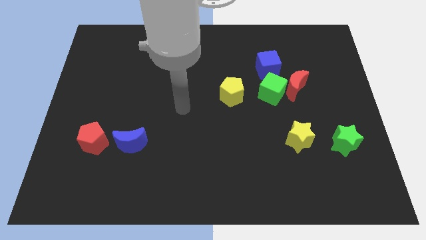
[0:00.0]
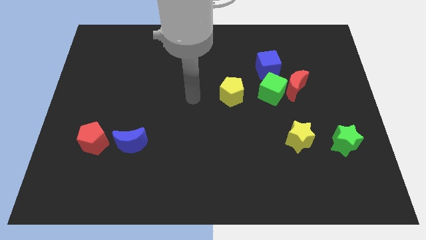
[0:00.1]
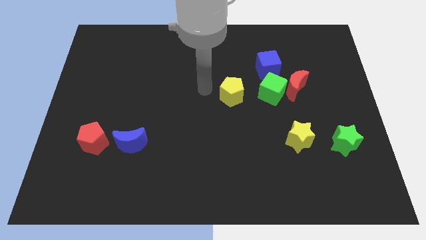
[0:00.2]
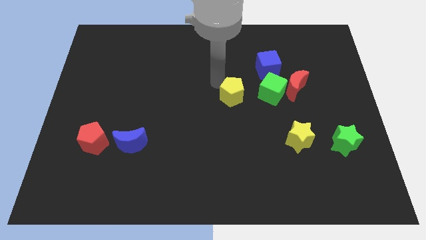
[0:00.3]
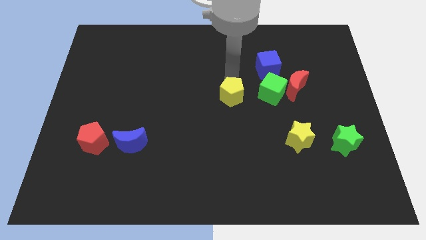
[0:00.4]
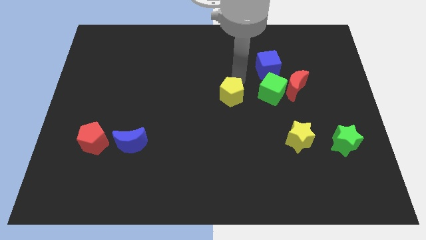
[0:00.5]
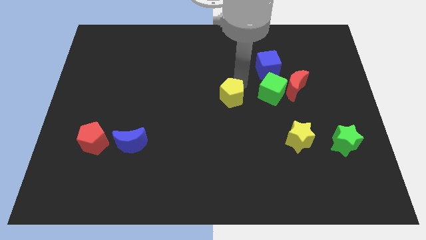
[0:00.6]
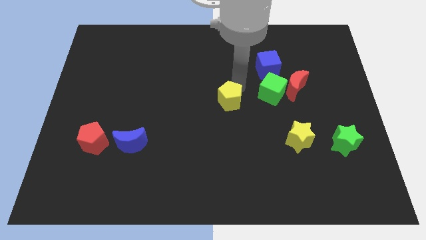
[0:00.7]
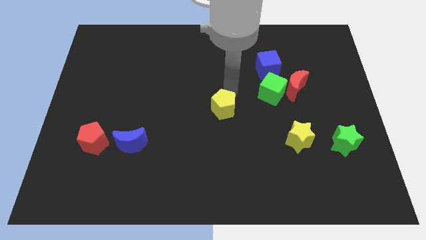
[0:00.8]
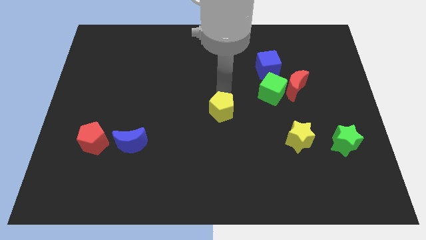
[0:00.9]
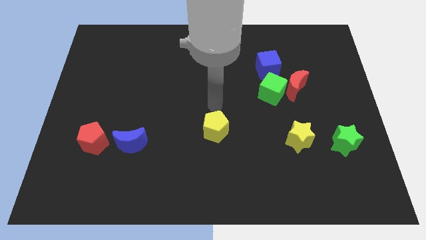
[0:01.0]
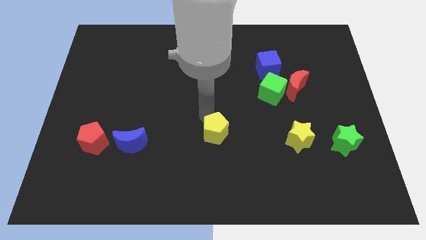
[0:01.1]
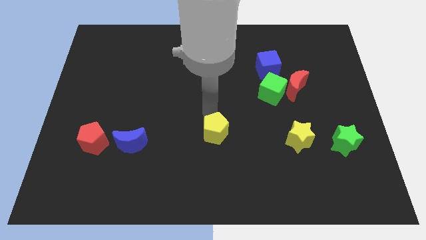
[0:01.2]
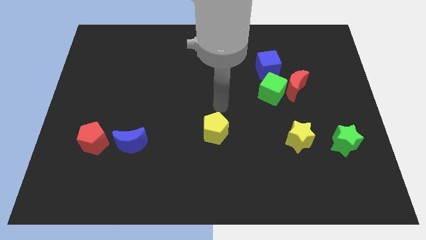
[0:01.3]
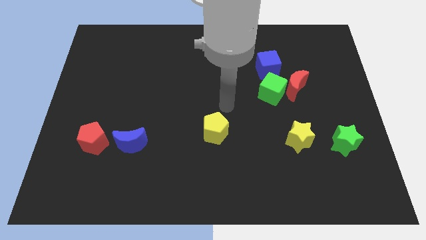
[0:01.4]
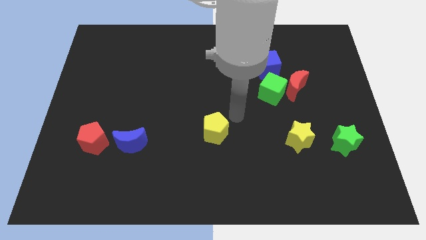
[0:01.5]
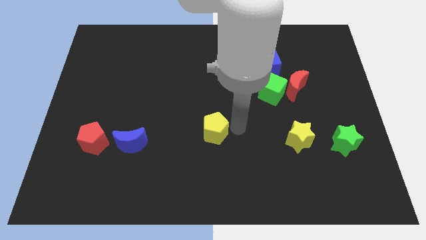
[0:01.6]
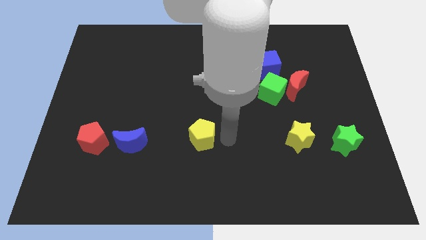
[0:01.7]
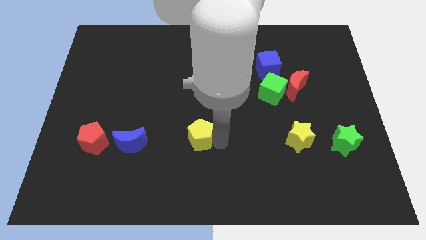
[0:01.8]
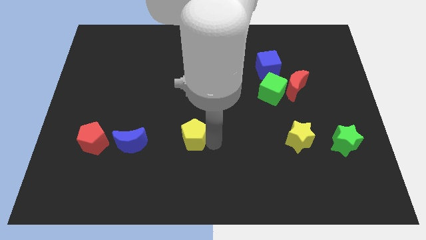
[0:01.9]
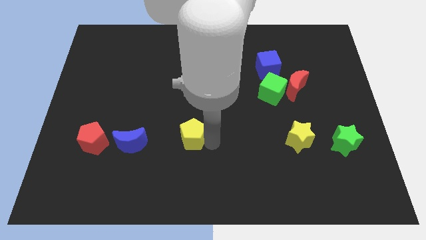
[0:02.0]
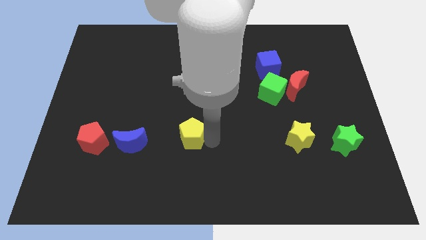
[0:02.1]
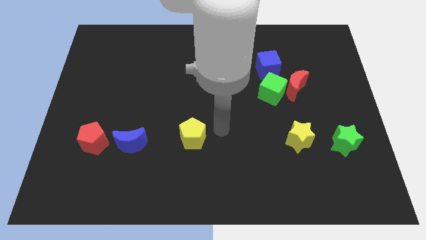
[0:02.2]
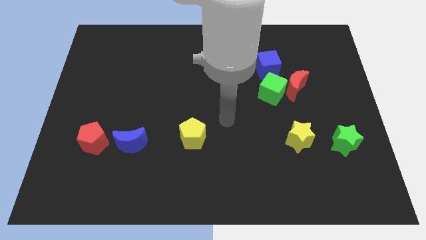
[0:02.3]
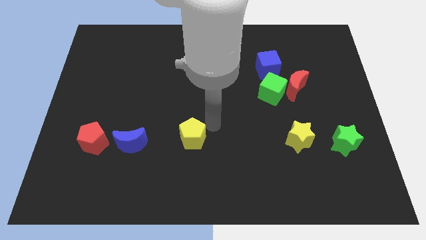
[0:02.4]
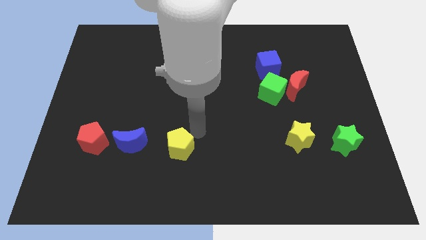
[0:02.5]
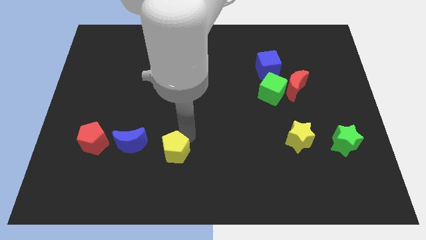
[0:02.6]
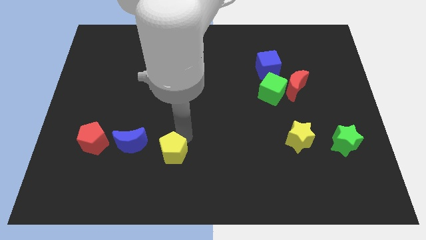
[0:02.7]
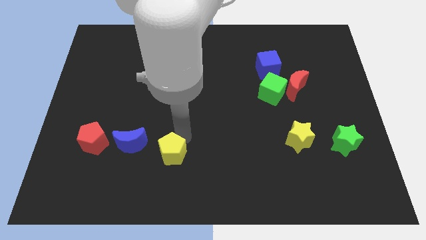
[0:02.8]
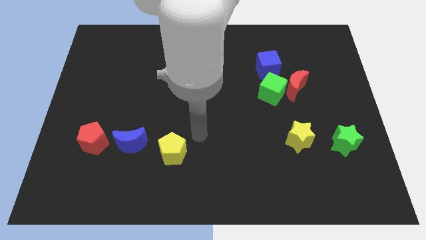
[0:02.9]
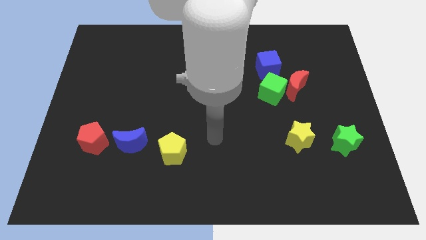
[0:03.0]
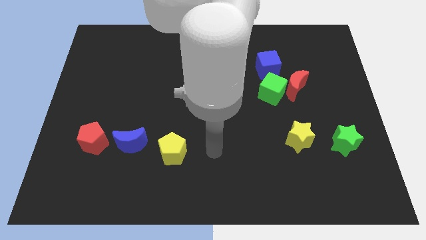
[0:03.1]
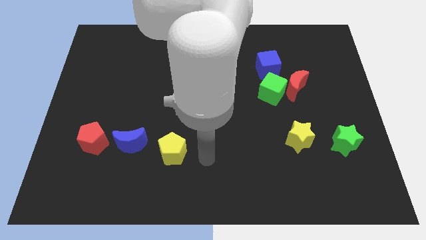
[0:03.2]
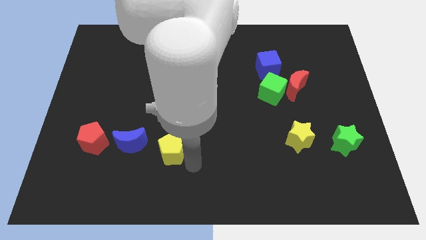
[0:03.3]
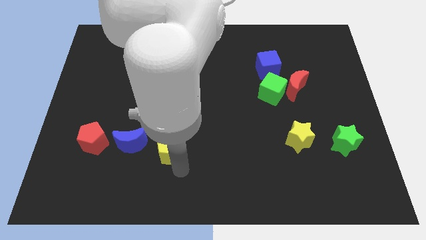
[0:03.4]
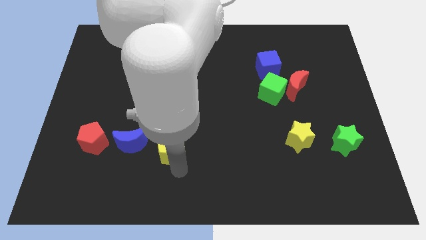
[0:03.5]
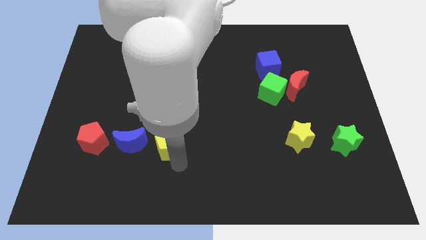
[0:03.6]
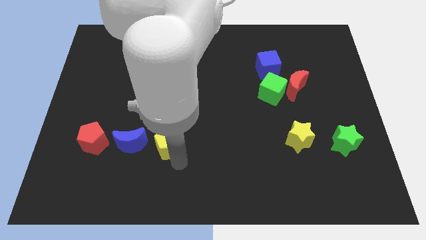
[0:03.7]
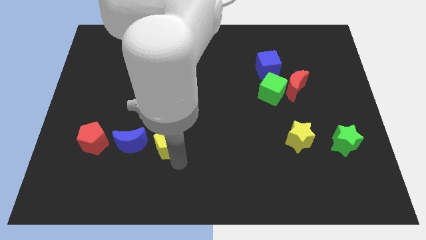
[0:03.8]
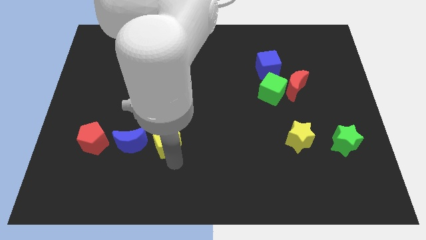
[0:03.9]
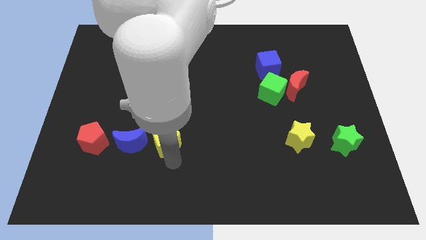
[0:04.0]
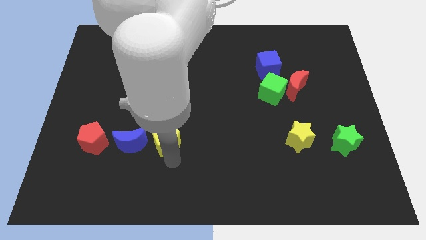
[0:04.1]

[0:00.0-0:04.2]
place the yellow pentagon to the right of the blue moon

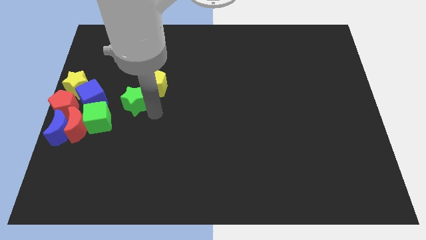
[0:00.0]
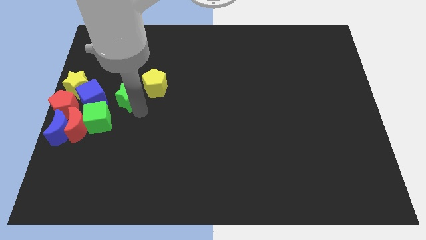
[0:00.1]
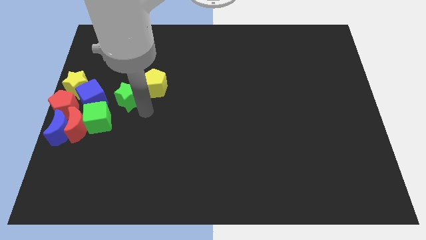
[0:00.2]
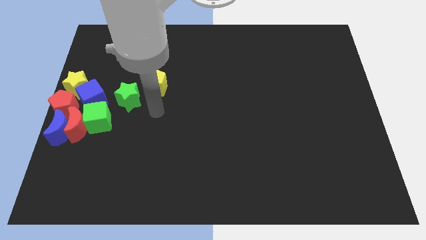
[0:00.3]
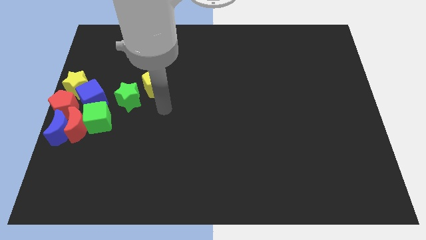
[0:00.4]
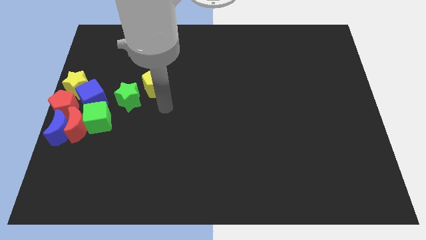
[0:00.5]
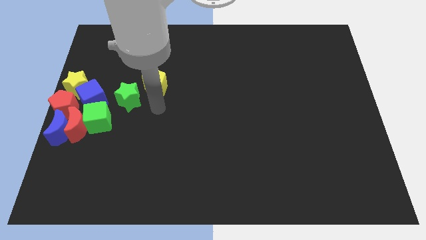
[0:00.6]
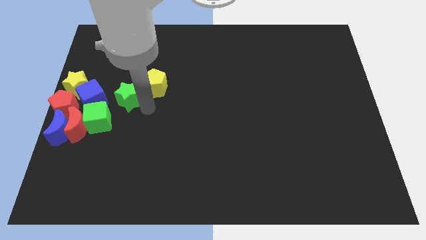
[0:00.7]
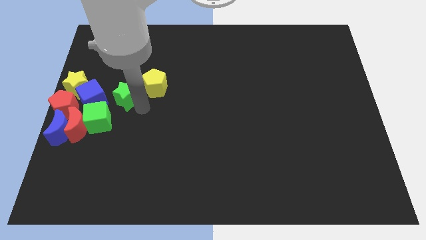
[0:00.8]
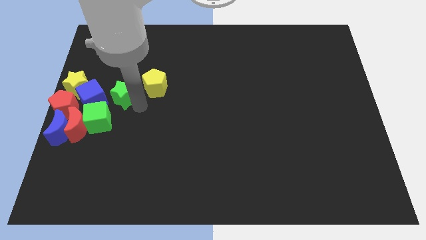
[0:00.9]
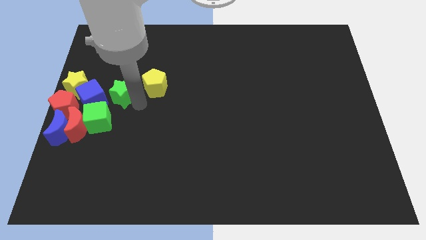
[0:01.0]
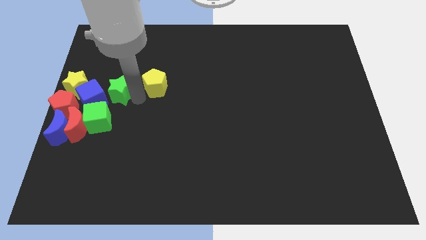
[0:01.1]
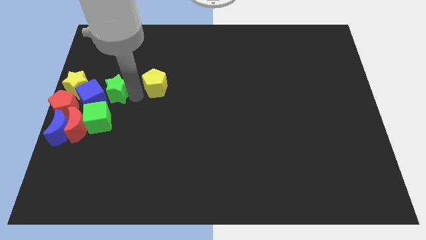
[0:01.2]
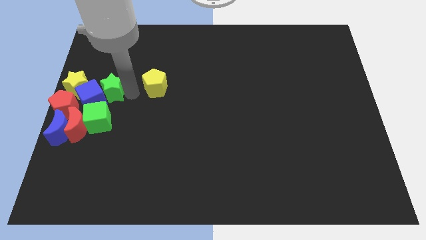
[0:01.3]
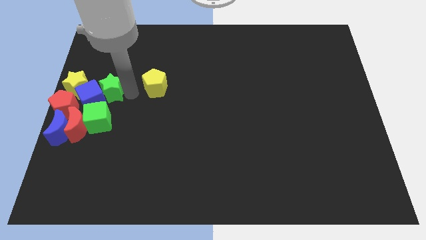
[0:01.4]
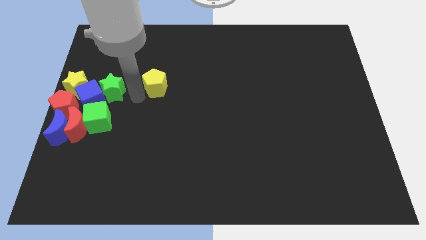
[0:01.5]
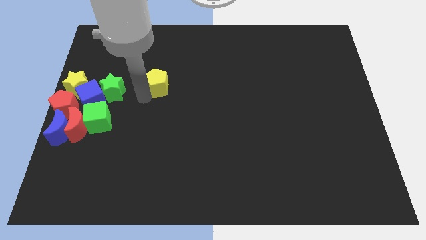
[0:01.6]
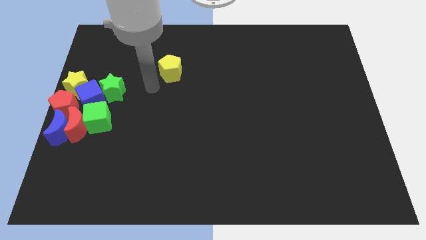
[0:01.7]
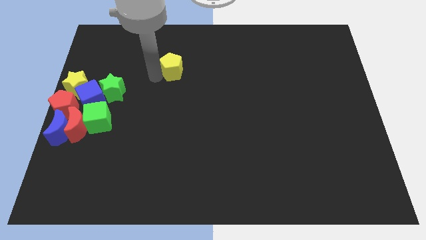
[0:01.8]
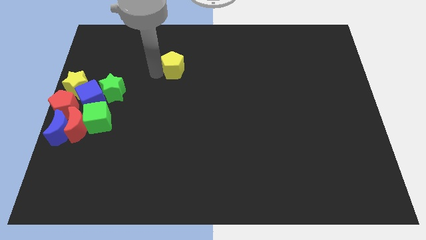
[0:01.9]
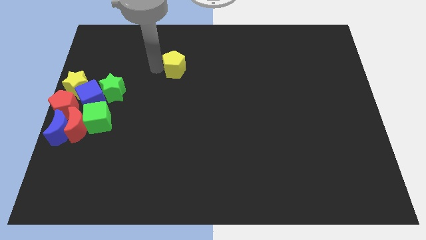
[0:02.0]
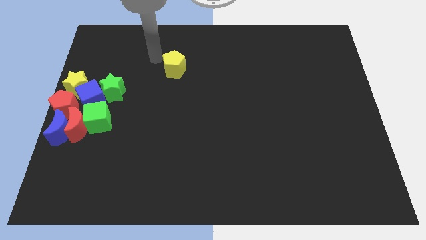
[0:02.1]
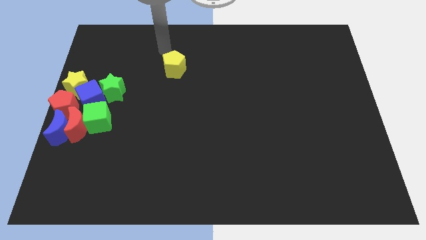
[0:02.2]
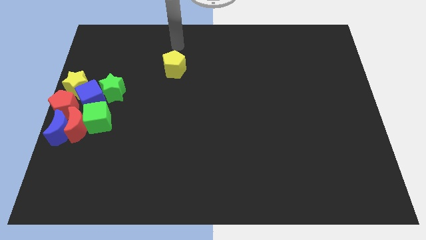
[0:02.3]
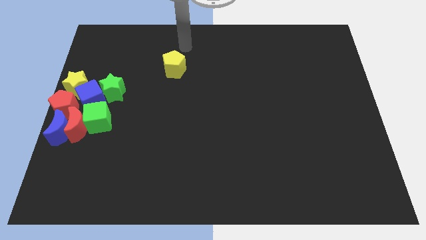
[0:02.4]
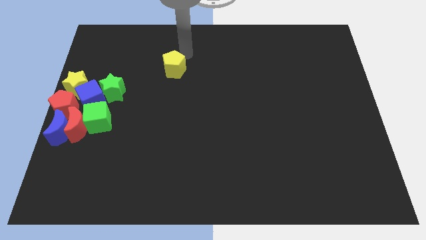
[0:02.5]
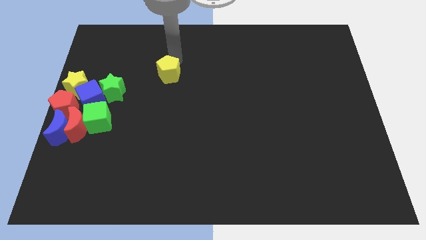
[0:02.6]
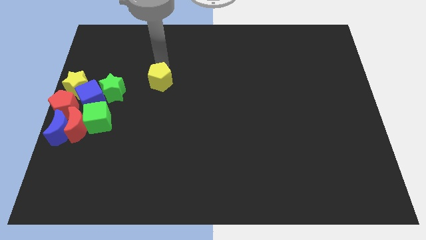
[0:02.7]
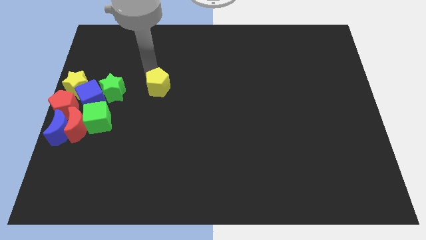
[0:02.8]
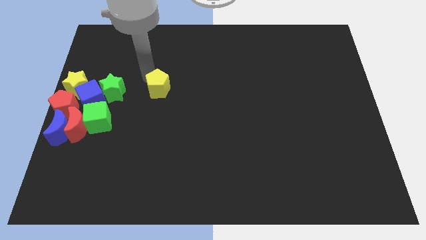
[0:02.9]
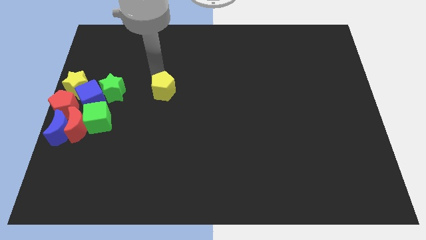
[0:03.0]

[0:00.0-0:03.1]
move the green star towards the blue cube

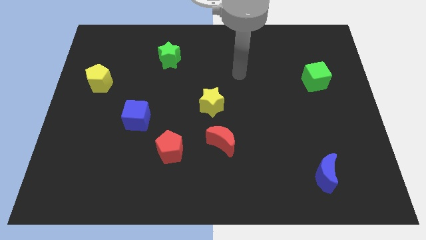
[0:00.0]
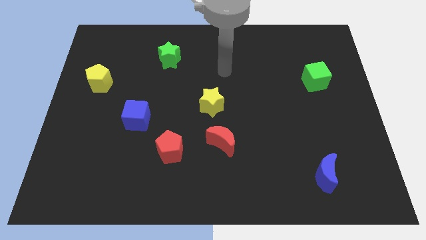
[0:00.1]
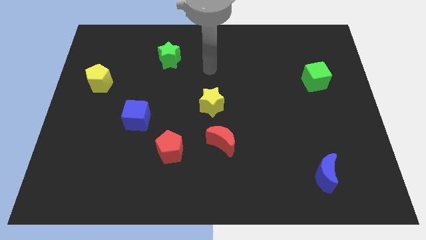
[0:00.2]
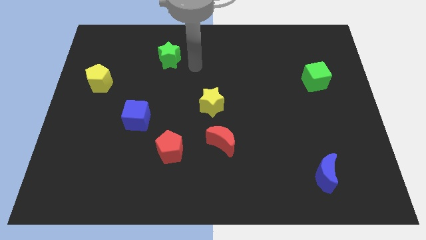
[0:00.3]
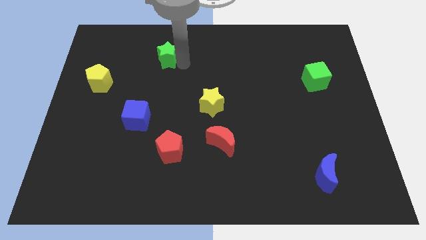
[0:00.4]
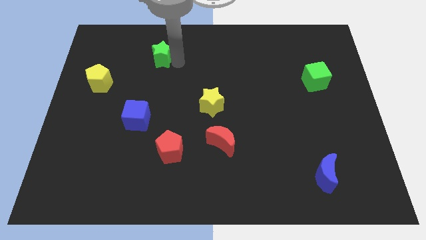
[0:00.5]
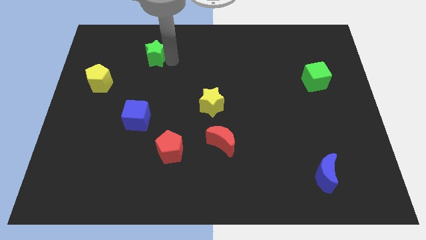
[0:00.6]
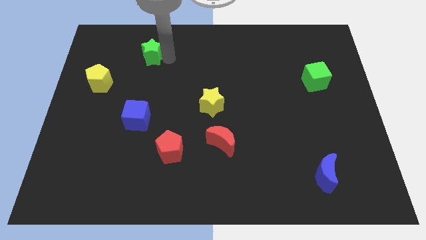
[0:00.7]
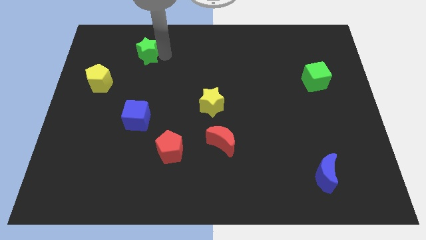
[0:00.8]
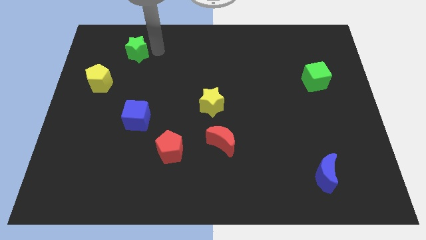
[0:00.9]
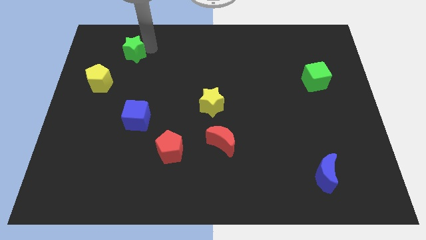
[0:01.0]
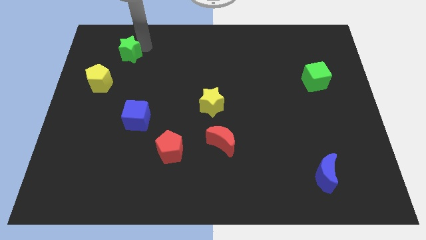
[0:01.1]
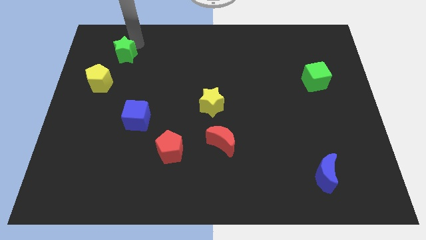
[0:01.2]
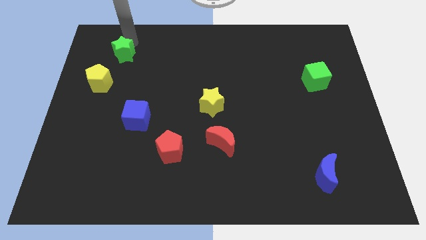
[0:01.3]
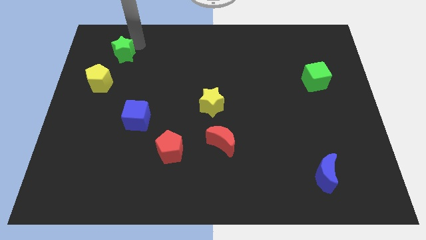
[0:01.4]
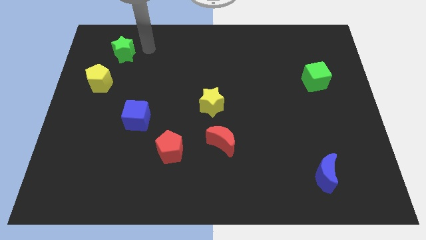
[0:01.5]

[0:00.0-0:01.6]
place green star left diagonally towards yellow pentagon

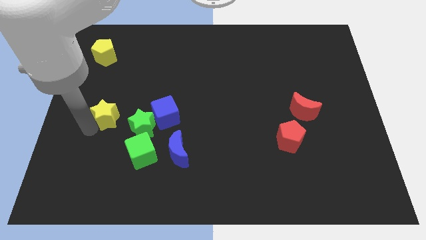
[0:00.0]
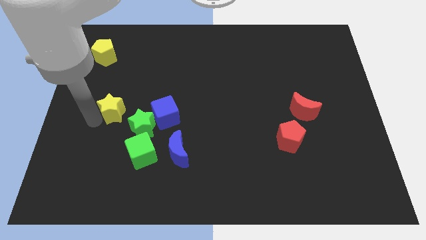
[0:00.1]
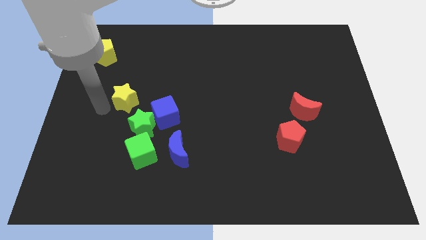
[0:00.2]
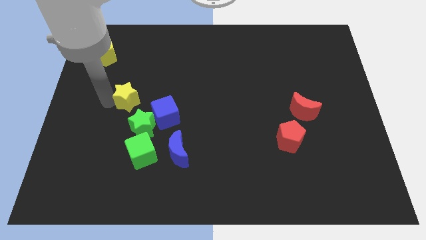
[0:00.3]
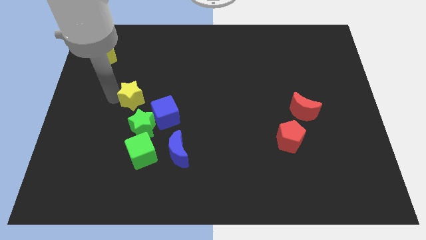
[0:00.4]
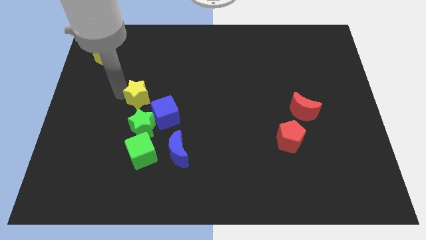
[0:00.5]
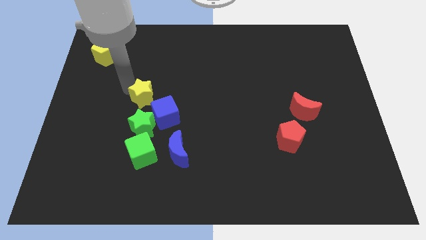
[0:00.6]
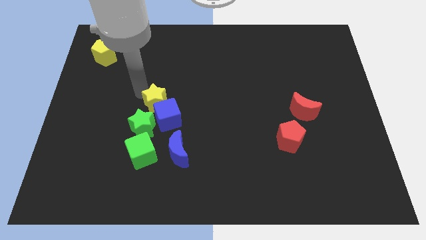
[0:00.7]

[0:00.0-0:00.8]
place the yellow star above the blue cube
